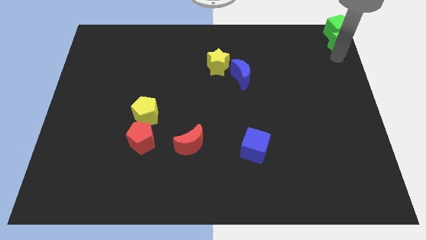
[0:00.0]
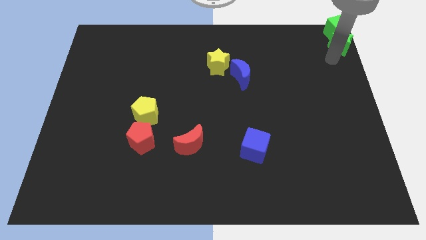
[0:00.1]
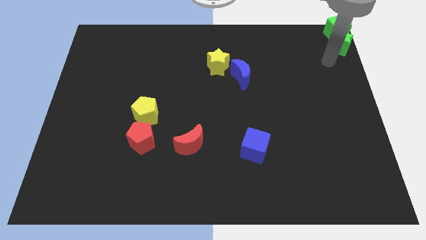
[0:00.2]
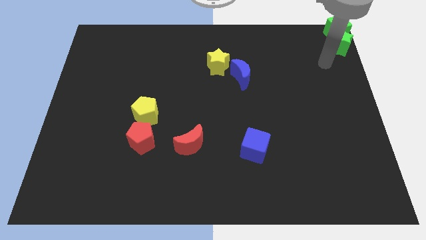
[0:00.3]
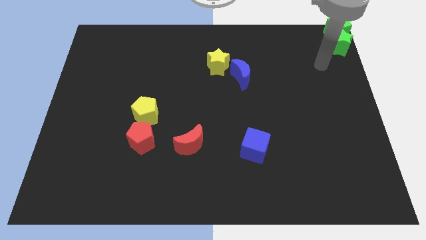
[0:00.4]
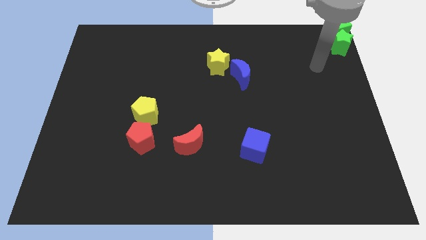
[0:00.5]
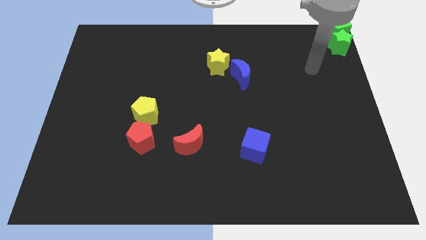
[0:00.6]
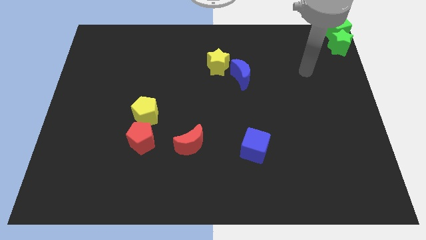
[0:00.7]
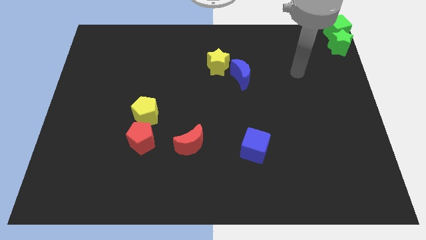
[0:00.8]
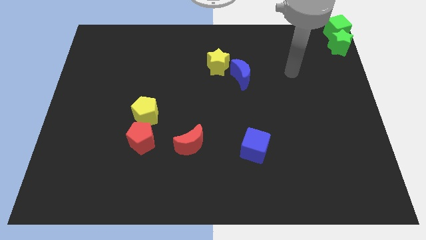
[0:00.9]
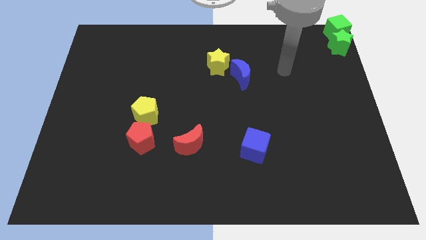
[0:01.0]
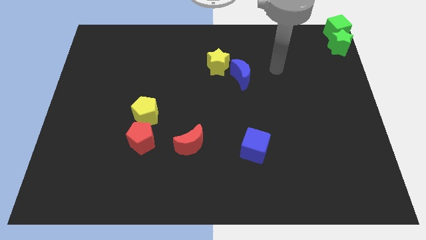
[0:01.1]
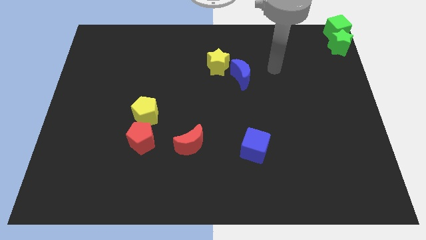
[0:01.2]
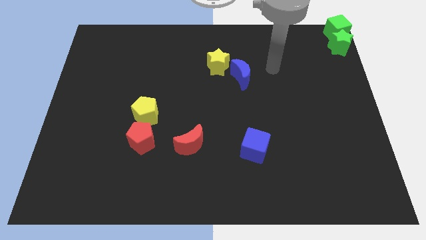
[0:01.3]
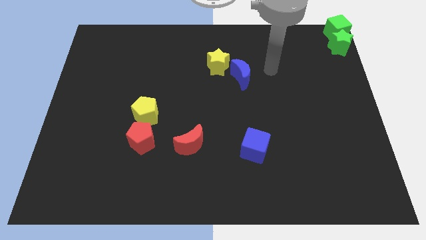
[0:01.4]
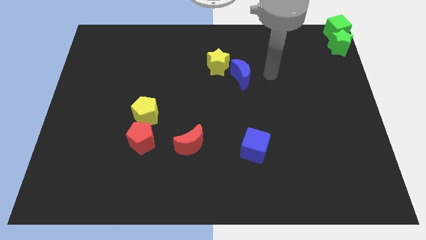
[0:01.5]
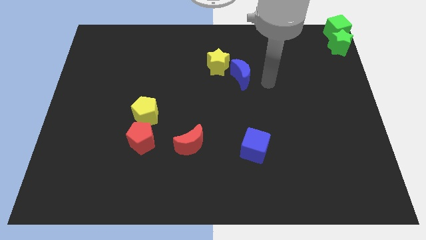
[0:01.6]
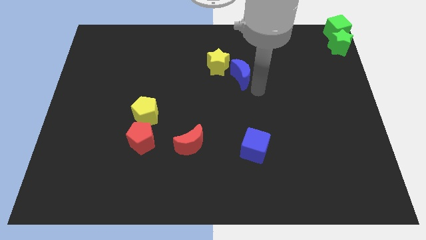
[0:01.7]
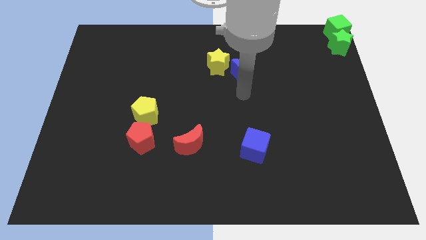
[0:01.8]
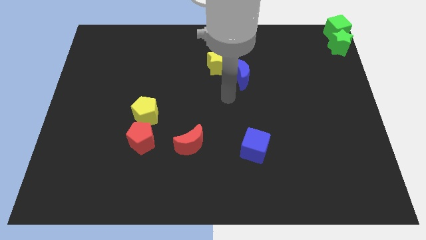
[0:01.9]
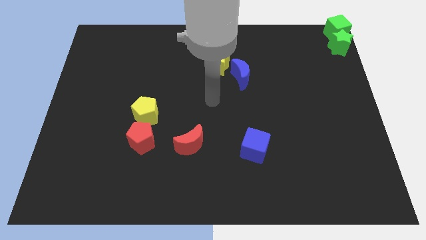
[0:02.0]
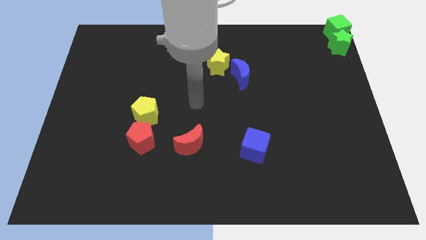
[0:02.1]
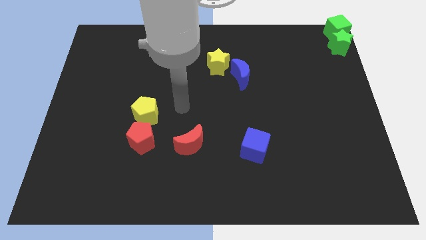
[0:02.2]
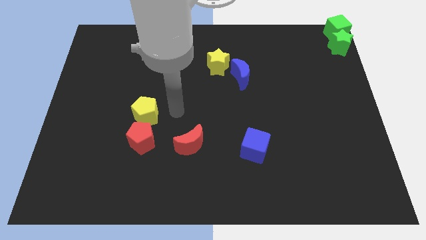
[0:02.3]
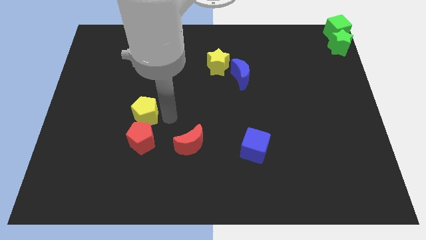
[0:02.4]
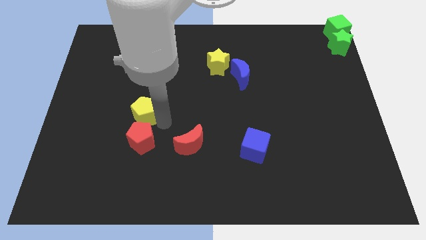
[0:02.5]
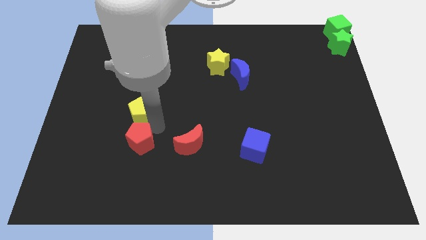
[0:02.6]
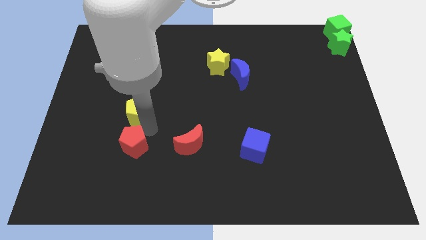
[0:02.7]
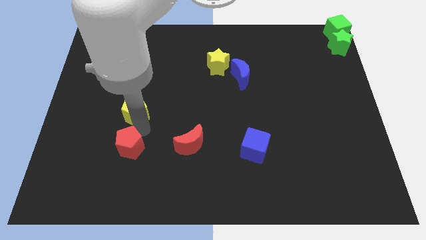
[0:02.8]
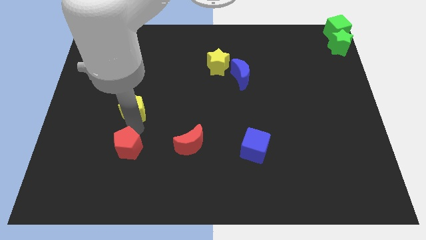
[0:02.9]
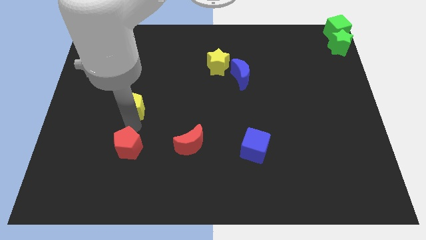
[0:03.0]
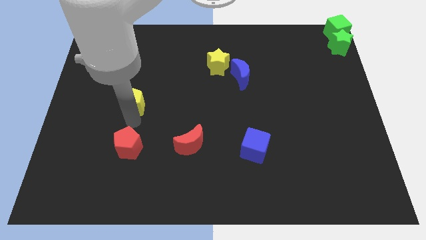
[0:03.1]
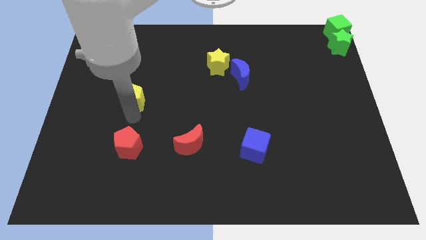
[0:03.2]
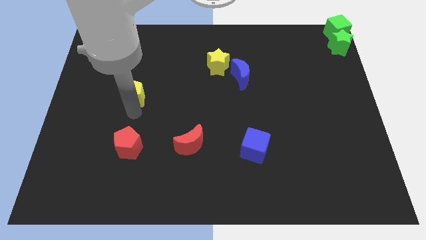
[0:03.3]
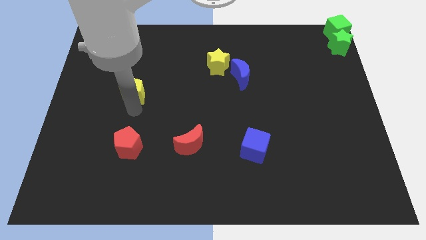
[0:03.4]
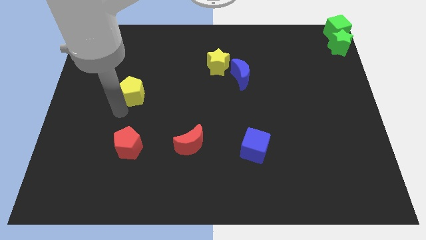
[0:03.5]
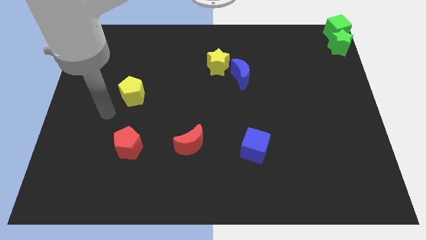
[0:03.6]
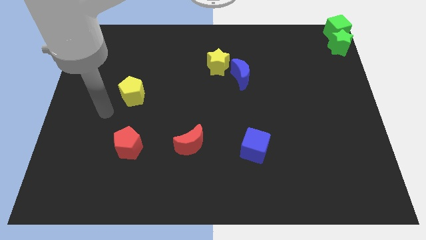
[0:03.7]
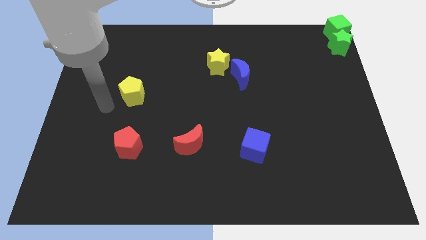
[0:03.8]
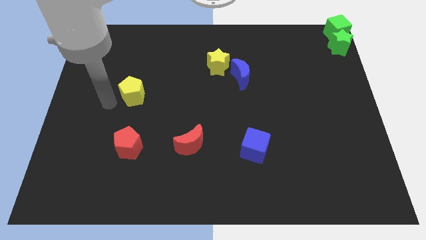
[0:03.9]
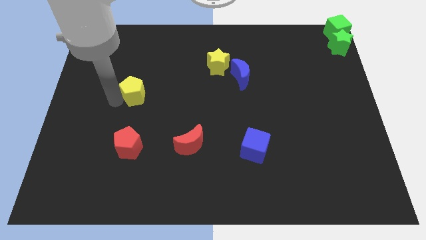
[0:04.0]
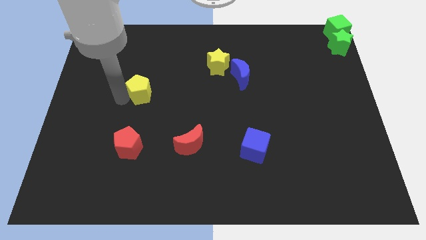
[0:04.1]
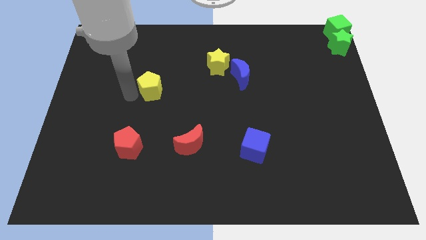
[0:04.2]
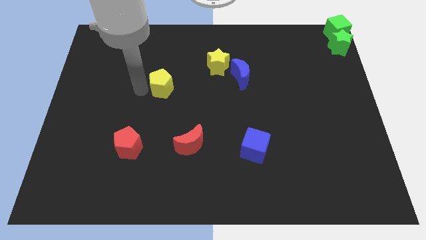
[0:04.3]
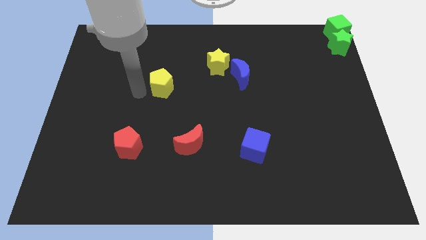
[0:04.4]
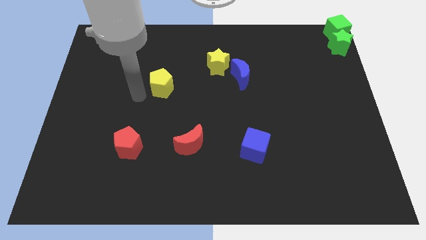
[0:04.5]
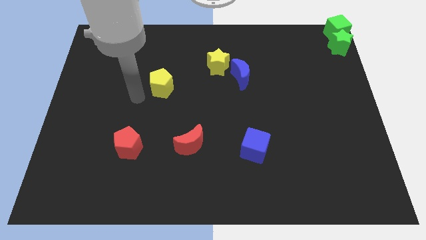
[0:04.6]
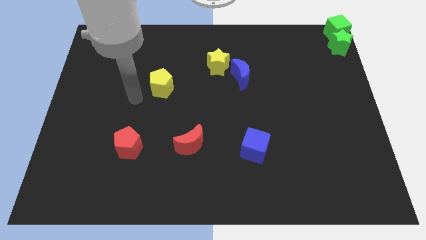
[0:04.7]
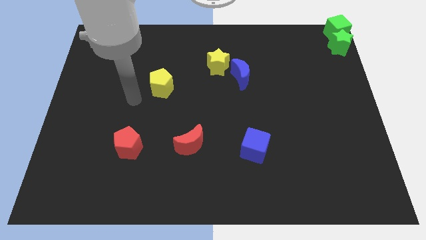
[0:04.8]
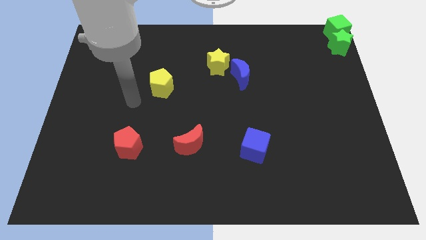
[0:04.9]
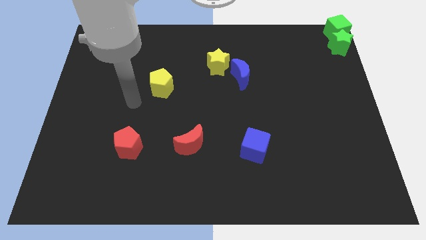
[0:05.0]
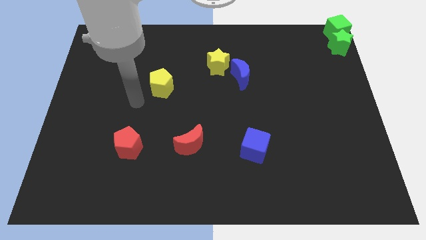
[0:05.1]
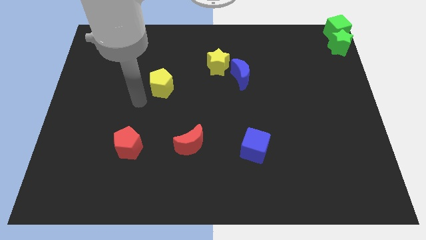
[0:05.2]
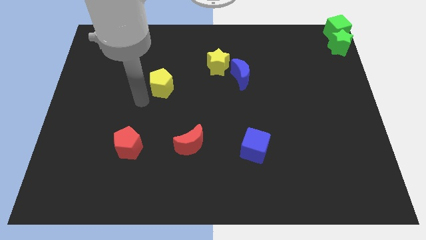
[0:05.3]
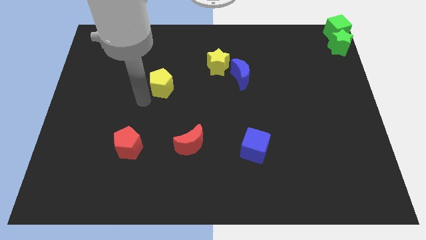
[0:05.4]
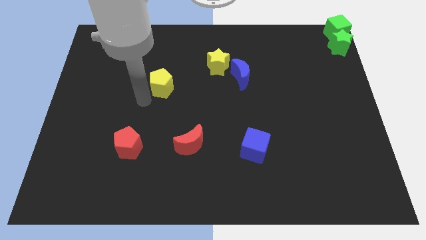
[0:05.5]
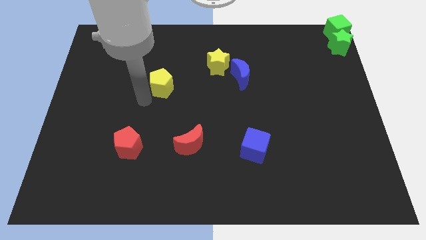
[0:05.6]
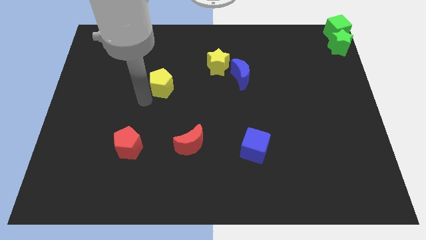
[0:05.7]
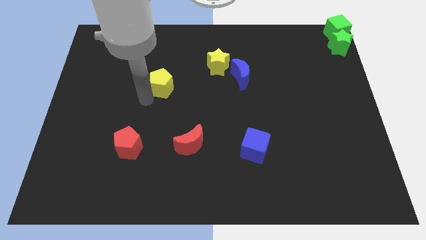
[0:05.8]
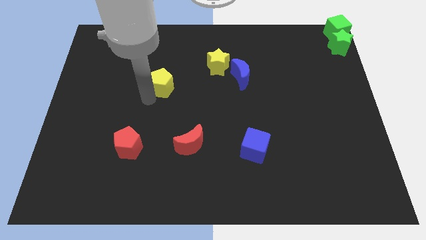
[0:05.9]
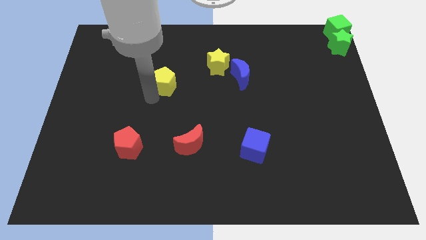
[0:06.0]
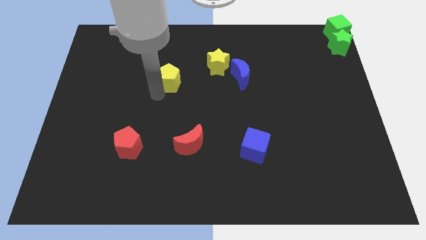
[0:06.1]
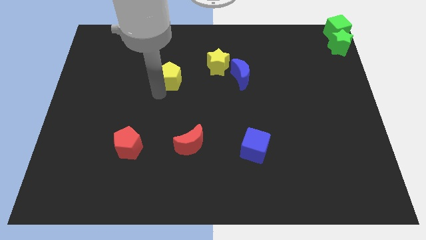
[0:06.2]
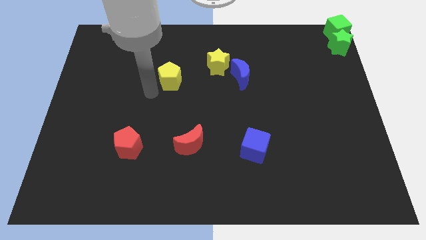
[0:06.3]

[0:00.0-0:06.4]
move the yellow pentagon horizontally left of the blue moon

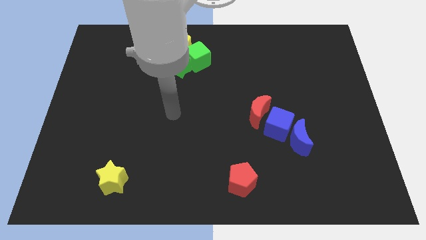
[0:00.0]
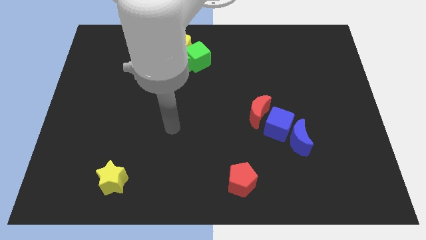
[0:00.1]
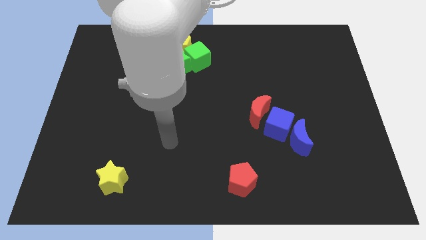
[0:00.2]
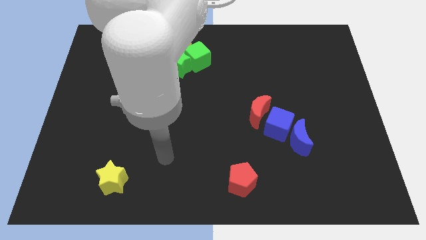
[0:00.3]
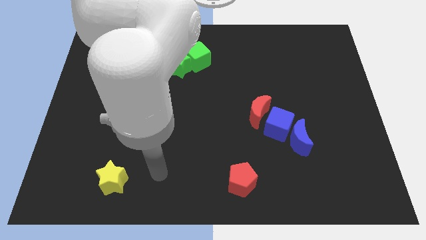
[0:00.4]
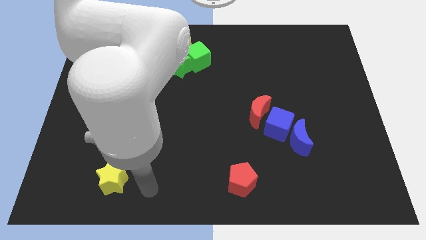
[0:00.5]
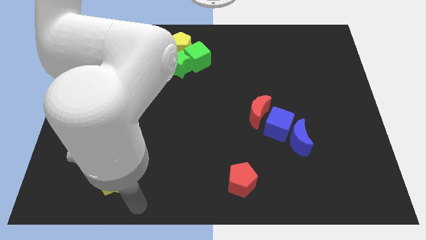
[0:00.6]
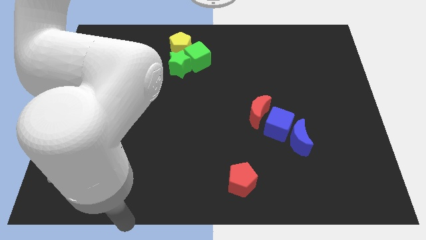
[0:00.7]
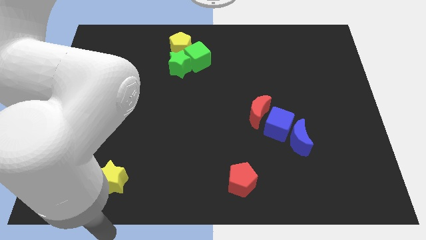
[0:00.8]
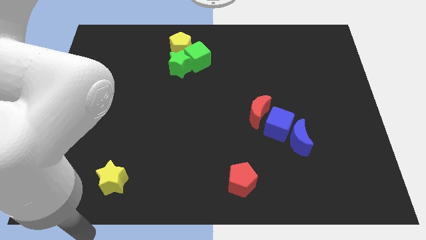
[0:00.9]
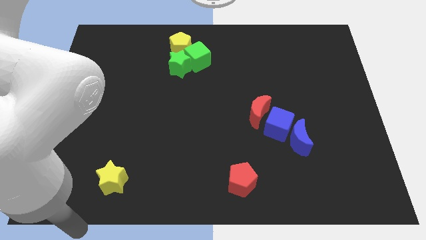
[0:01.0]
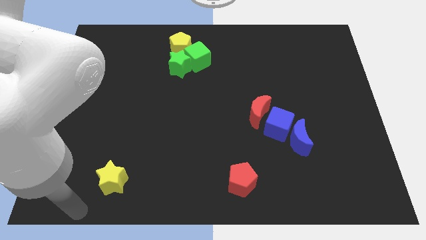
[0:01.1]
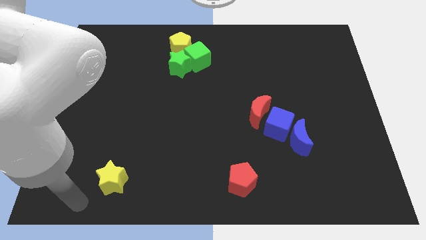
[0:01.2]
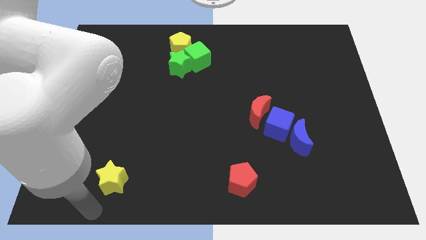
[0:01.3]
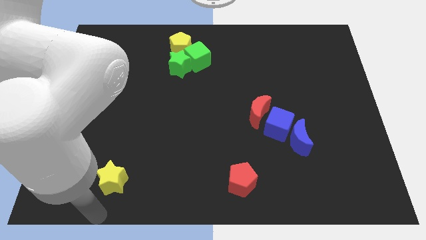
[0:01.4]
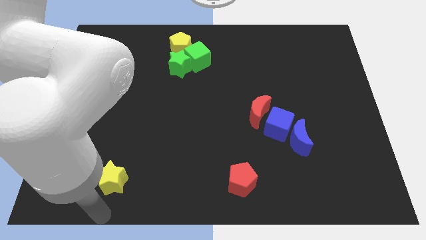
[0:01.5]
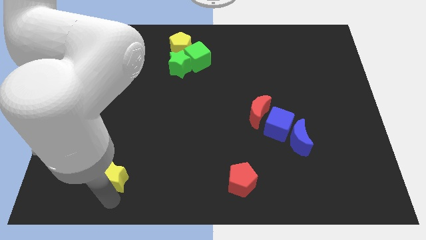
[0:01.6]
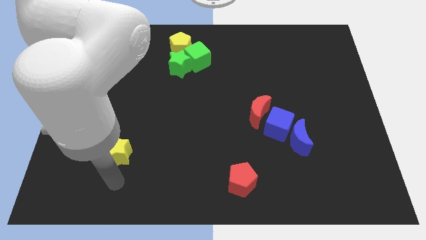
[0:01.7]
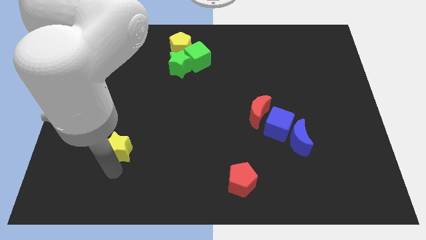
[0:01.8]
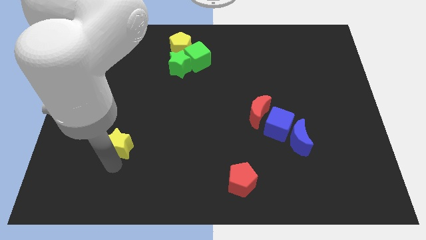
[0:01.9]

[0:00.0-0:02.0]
push the yellow star slightly top

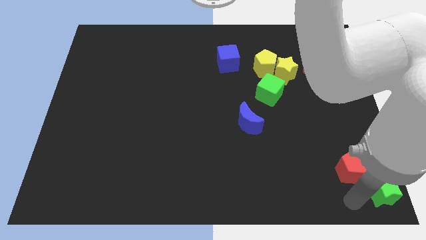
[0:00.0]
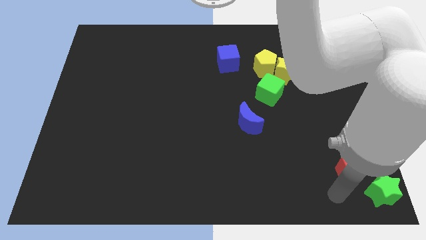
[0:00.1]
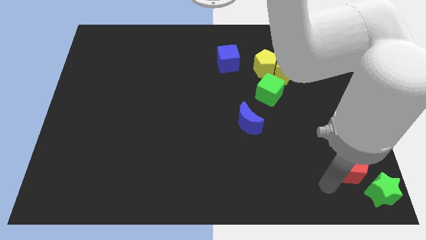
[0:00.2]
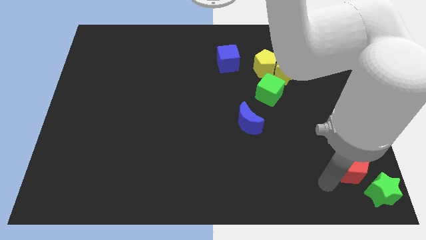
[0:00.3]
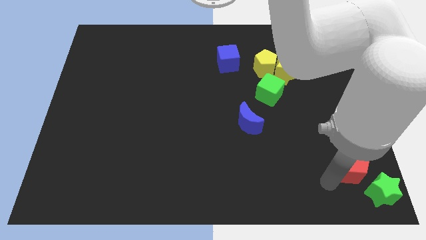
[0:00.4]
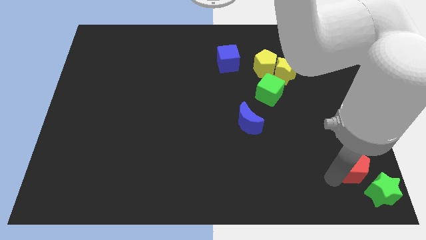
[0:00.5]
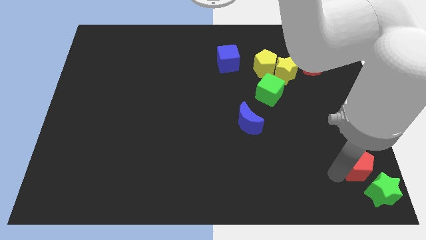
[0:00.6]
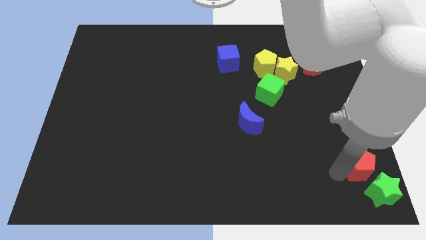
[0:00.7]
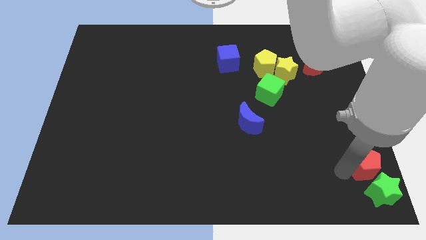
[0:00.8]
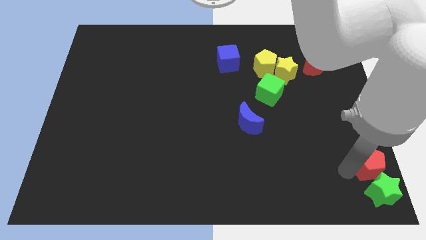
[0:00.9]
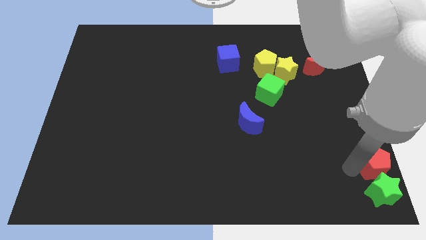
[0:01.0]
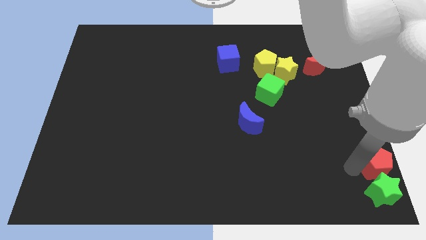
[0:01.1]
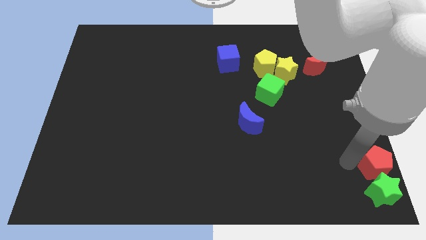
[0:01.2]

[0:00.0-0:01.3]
move the red pentagon to the top of the green star
